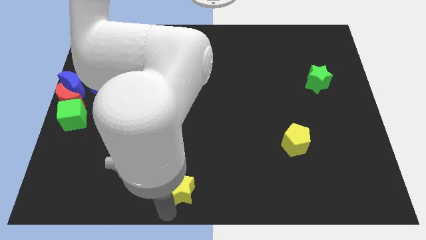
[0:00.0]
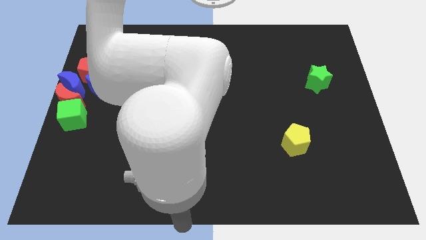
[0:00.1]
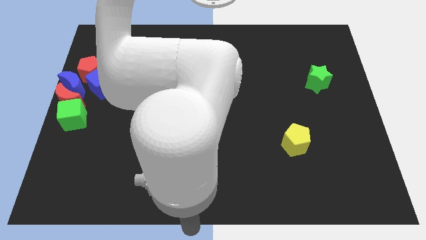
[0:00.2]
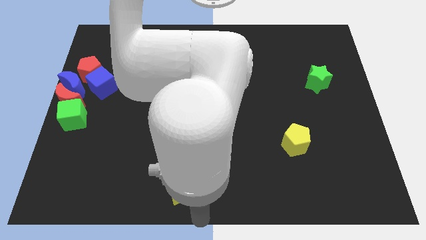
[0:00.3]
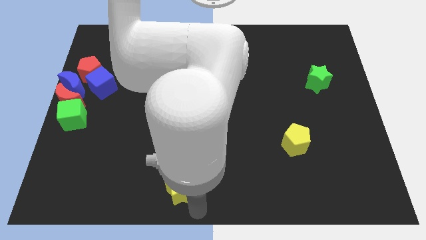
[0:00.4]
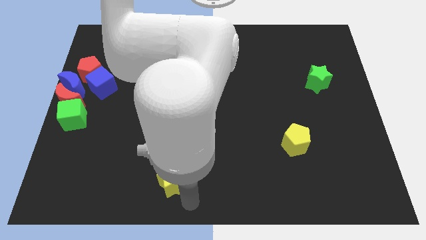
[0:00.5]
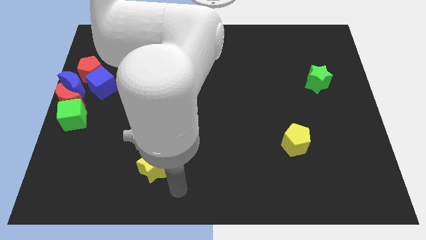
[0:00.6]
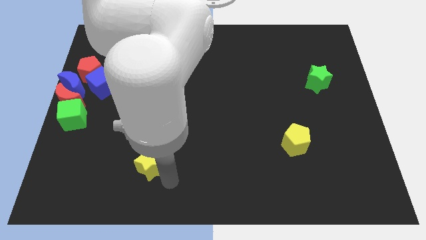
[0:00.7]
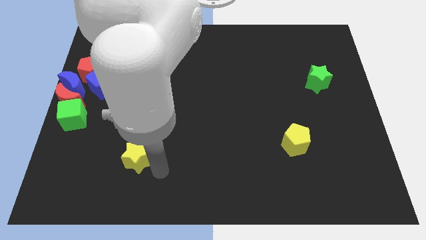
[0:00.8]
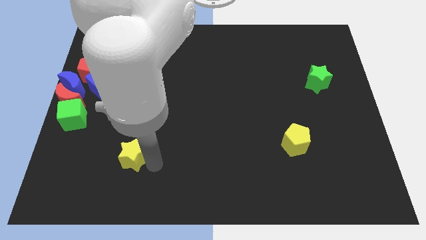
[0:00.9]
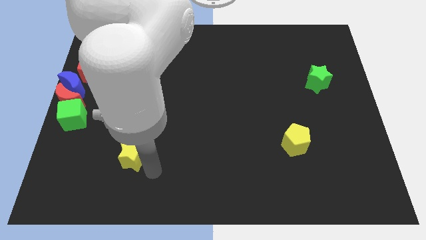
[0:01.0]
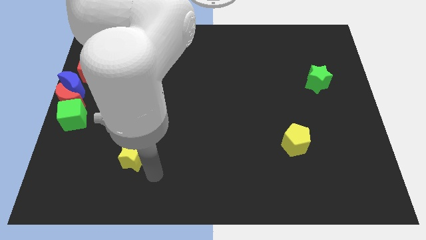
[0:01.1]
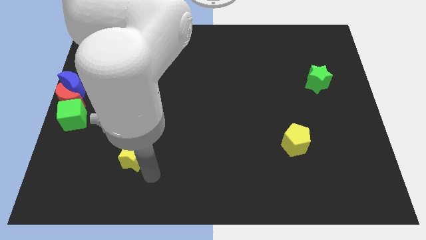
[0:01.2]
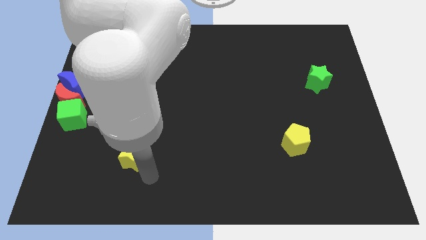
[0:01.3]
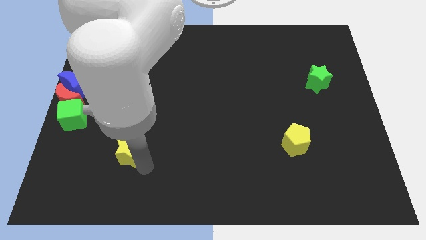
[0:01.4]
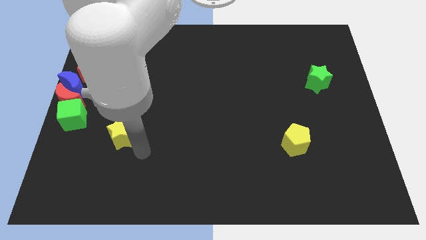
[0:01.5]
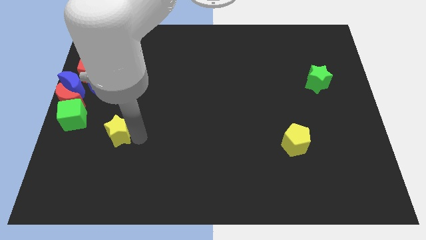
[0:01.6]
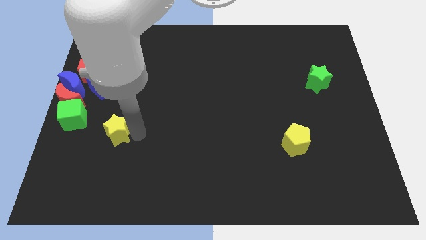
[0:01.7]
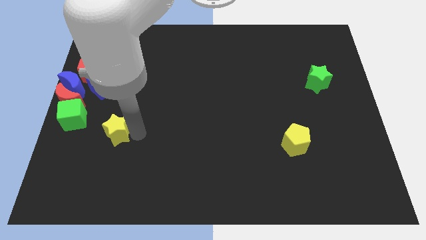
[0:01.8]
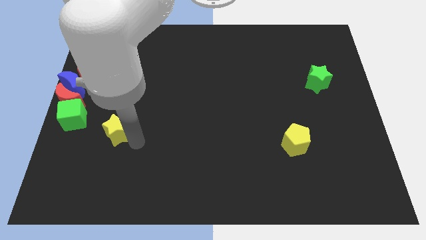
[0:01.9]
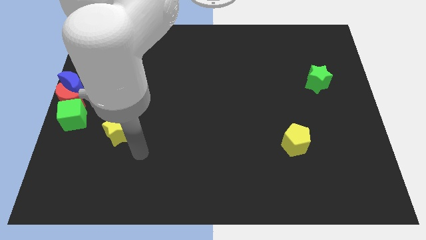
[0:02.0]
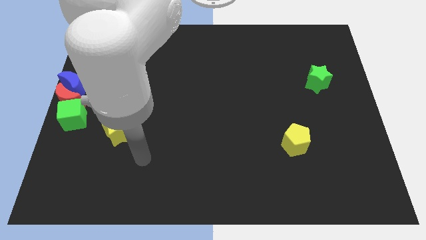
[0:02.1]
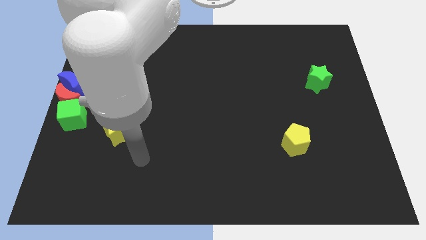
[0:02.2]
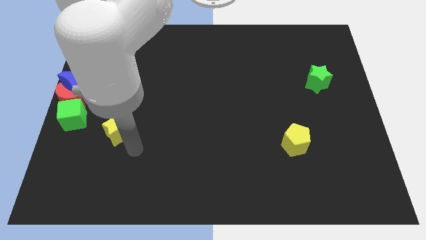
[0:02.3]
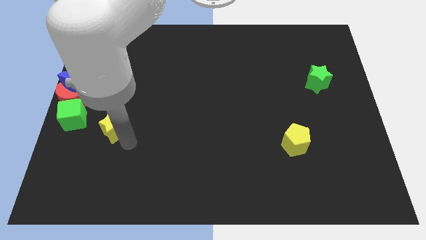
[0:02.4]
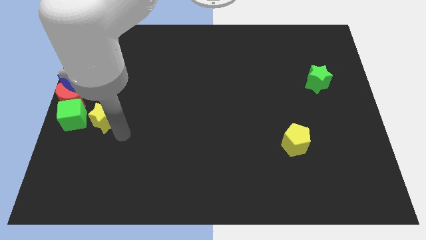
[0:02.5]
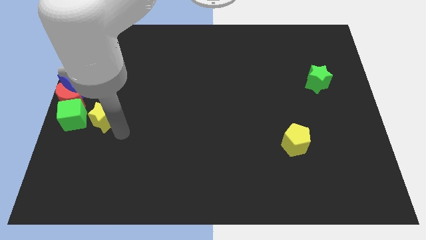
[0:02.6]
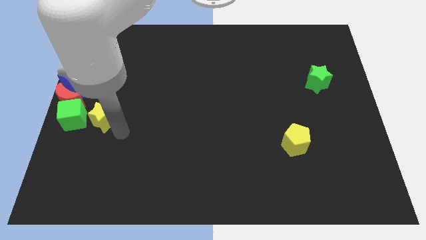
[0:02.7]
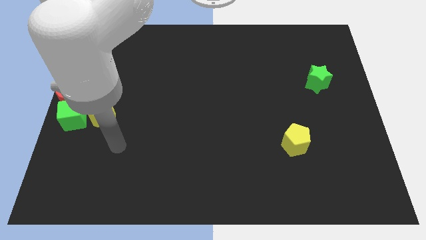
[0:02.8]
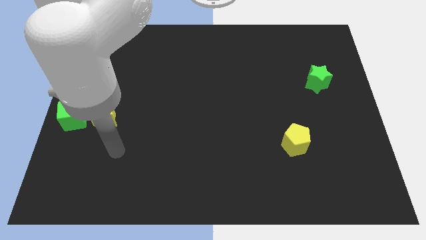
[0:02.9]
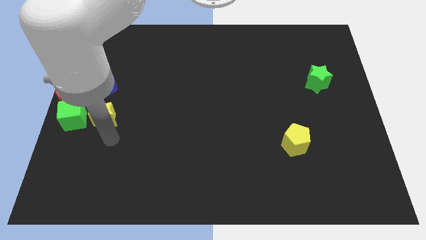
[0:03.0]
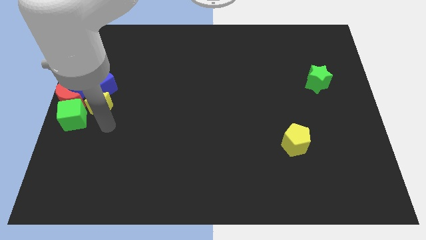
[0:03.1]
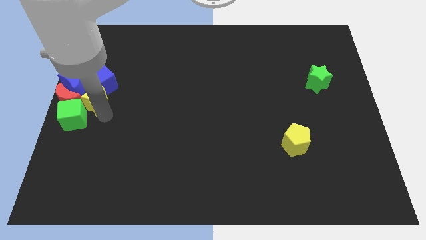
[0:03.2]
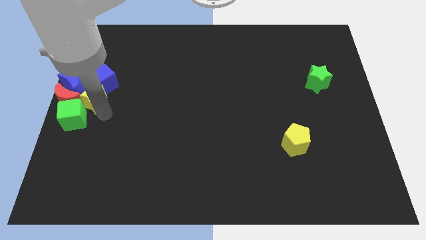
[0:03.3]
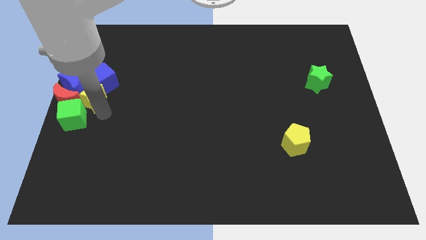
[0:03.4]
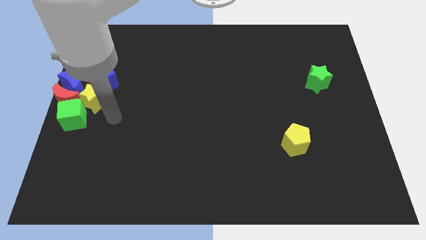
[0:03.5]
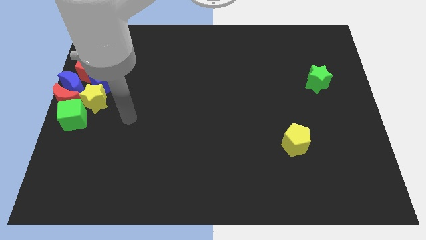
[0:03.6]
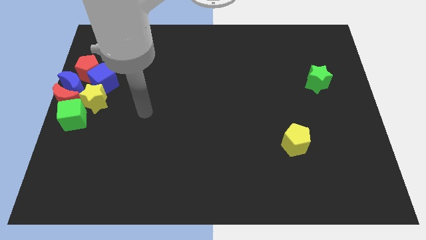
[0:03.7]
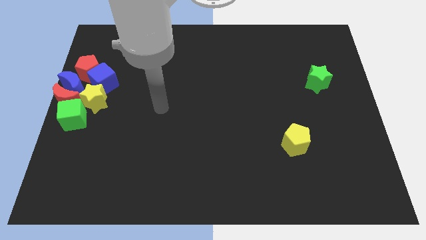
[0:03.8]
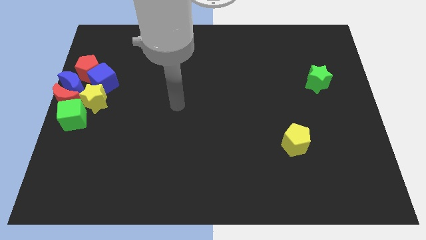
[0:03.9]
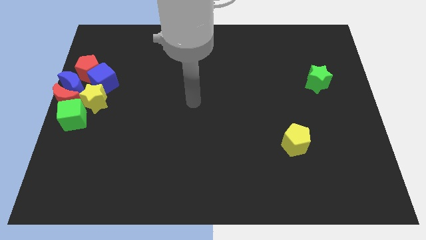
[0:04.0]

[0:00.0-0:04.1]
push yellow star to the right of red moon

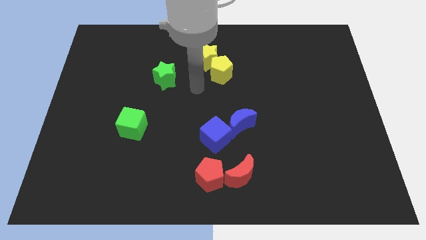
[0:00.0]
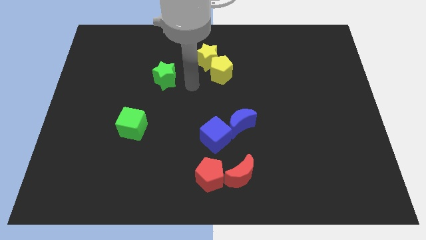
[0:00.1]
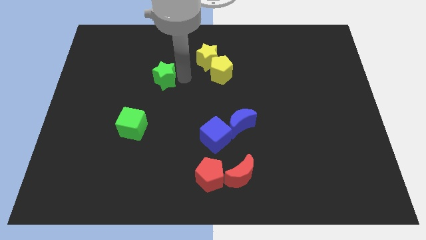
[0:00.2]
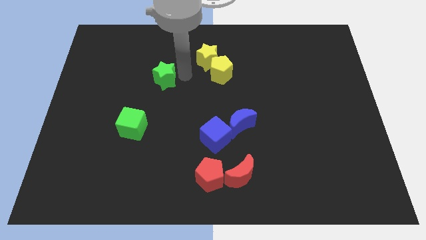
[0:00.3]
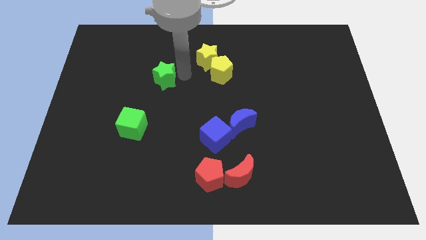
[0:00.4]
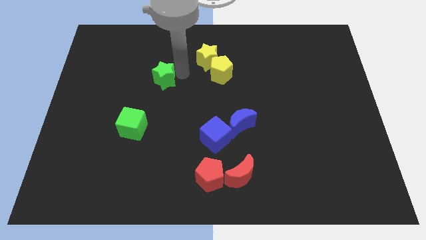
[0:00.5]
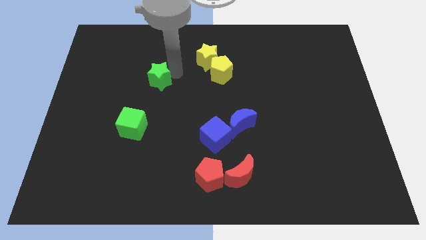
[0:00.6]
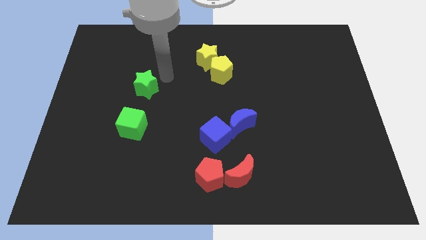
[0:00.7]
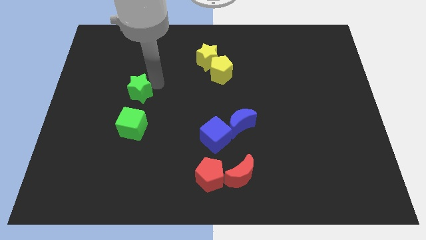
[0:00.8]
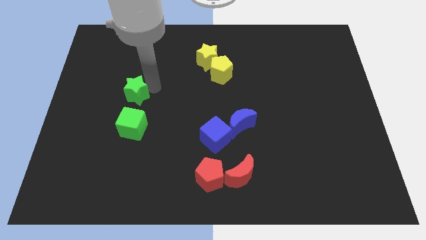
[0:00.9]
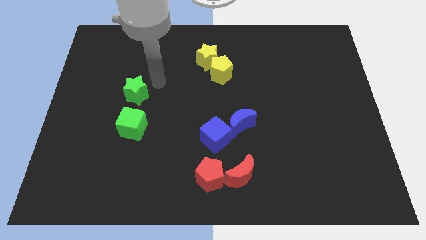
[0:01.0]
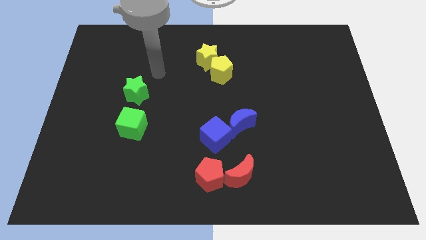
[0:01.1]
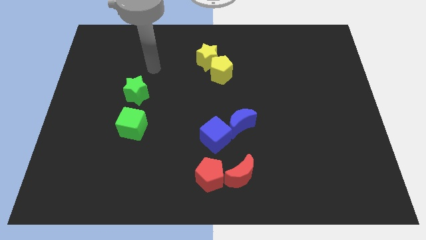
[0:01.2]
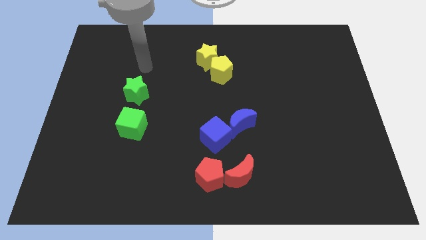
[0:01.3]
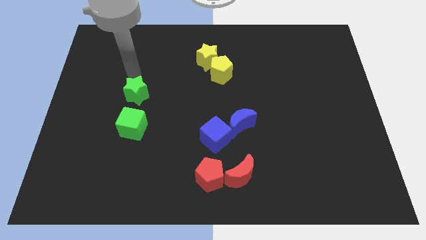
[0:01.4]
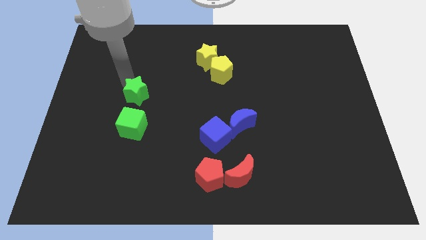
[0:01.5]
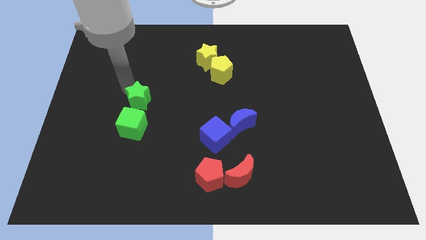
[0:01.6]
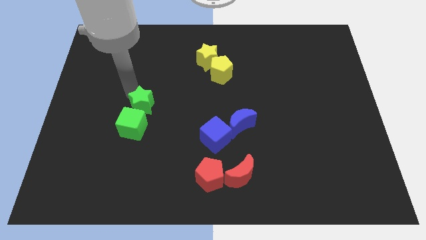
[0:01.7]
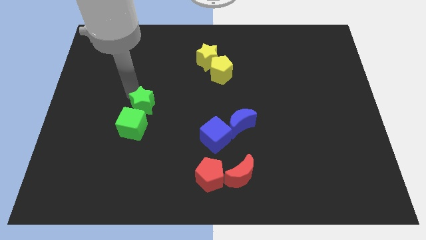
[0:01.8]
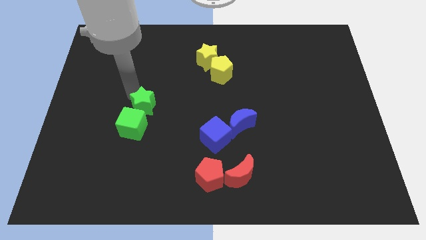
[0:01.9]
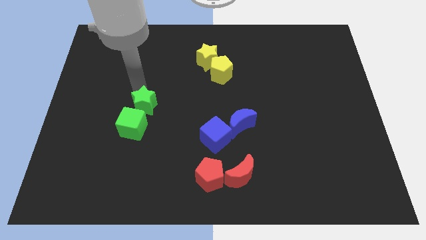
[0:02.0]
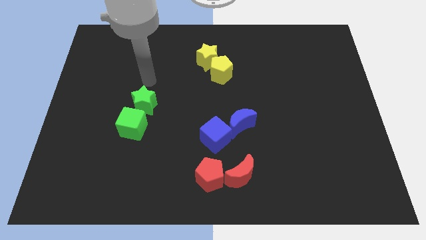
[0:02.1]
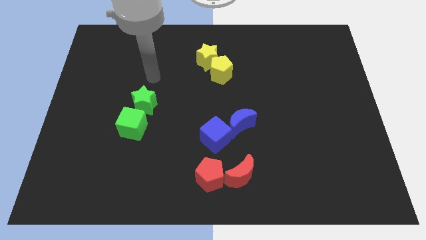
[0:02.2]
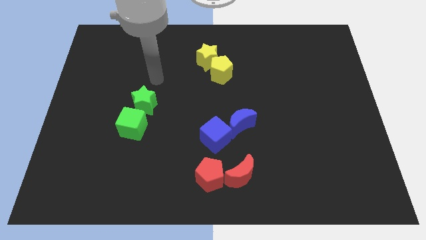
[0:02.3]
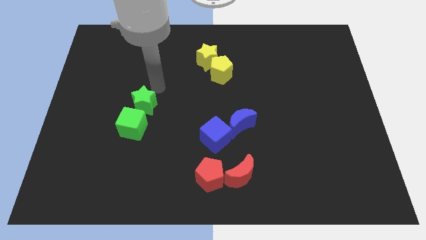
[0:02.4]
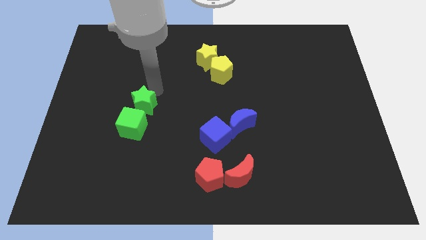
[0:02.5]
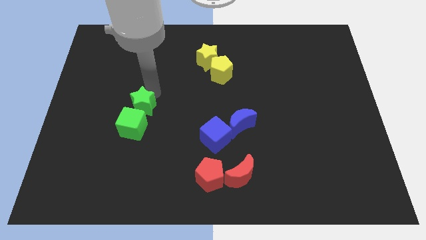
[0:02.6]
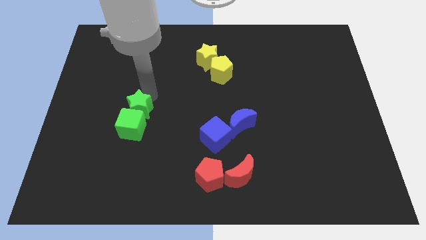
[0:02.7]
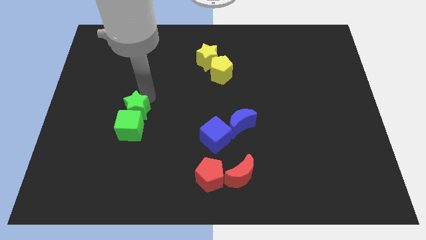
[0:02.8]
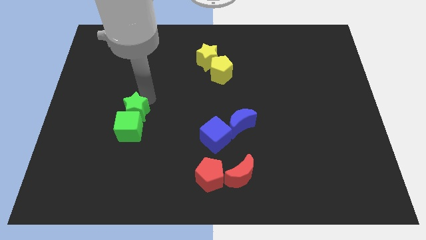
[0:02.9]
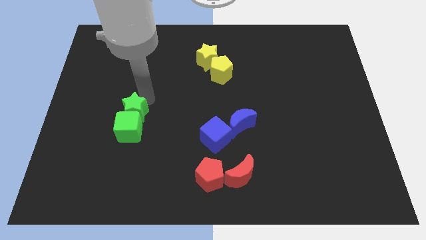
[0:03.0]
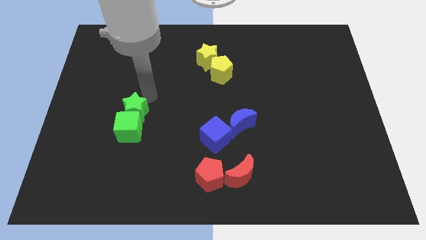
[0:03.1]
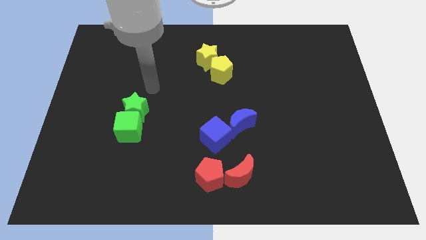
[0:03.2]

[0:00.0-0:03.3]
push the green star into the green cube

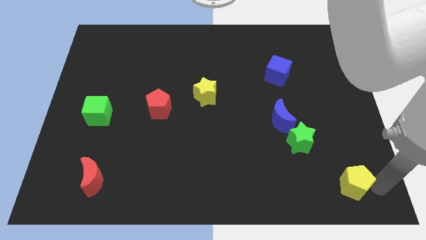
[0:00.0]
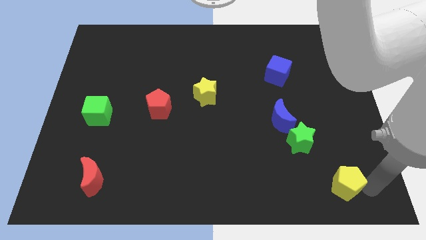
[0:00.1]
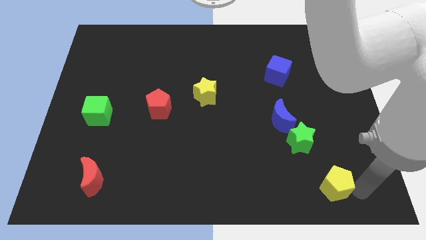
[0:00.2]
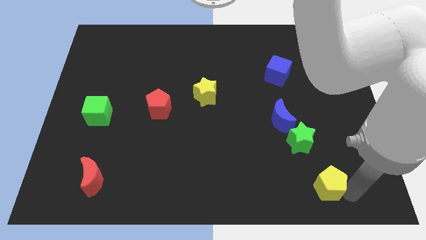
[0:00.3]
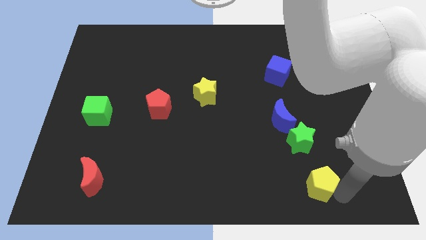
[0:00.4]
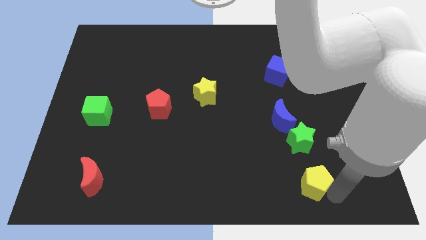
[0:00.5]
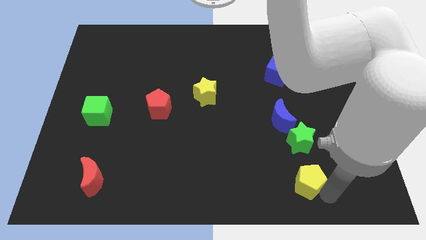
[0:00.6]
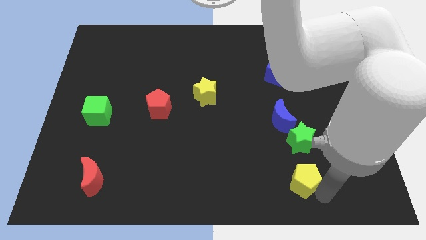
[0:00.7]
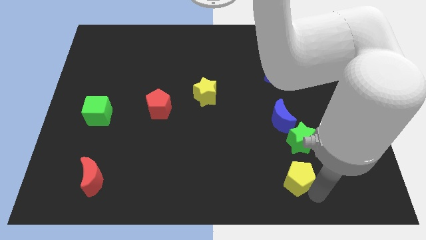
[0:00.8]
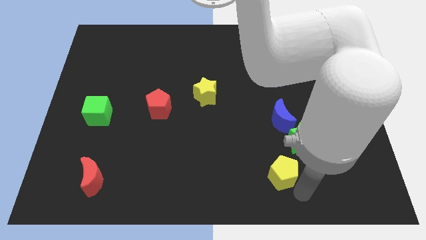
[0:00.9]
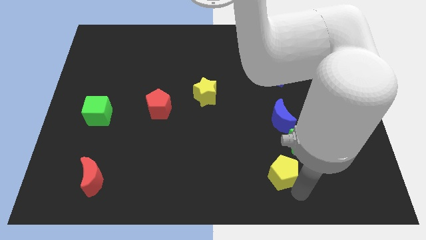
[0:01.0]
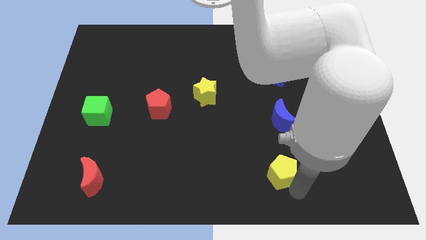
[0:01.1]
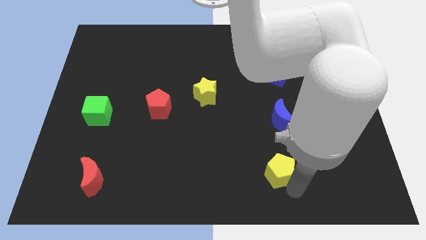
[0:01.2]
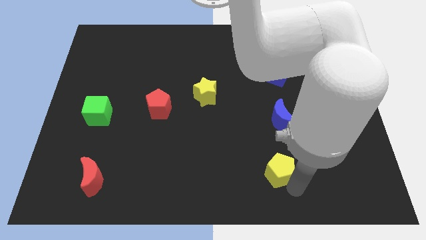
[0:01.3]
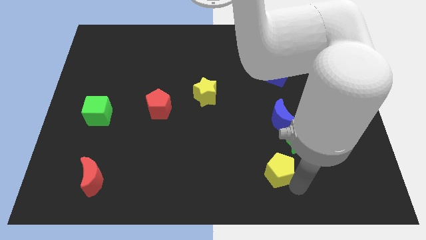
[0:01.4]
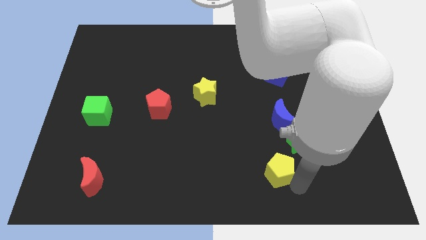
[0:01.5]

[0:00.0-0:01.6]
place the yellow pentagon below the green star
